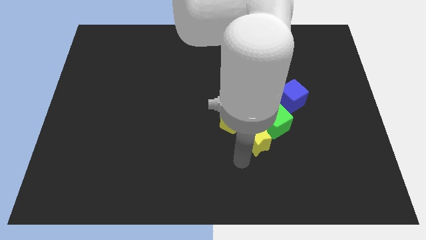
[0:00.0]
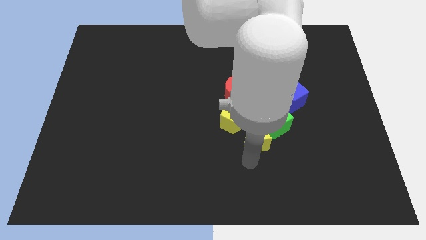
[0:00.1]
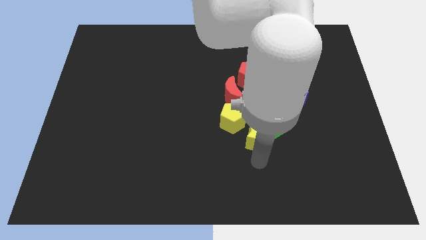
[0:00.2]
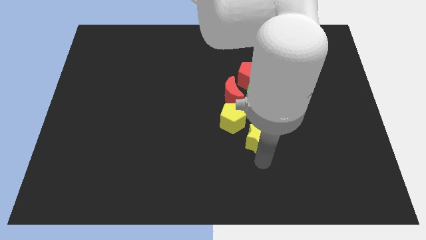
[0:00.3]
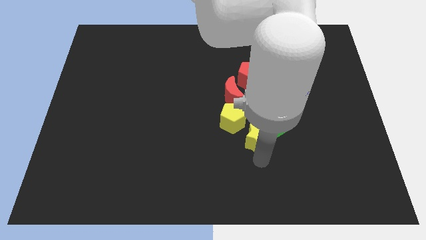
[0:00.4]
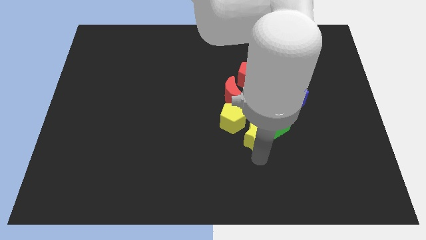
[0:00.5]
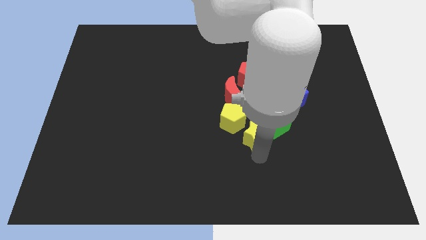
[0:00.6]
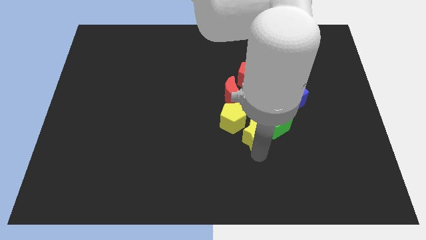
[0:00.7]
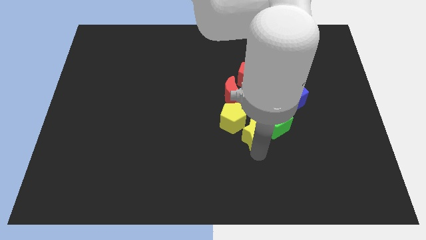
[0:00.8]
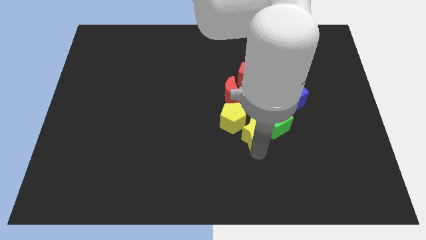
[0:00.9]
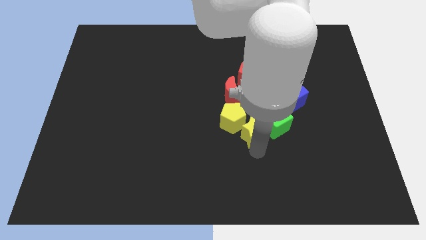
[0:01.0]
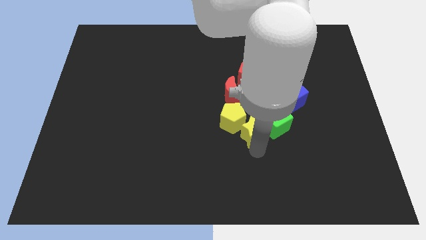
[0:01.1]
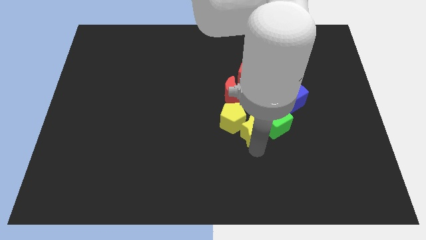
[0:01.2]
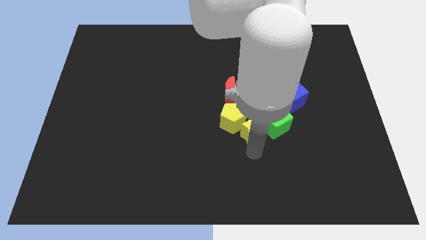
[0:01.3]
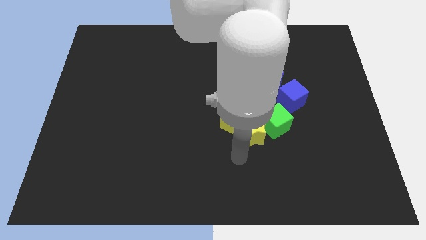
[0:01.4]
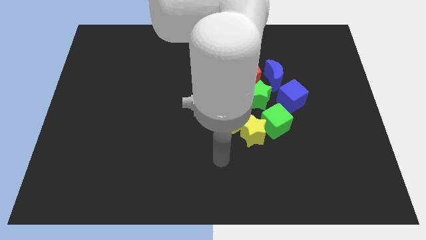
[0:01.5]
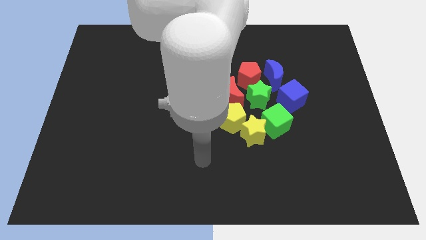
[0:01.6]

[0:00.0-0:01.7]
push the yellow star into the yellow pentagon

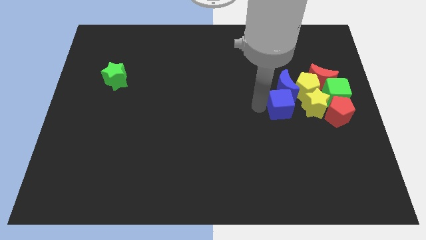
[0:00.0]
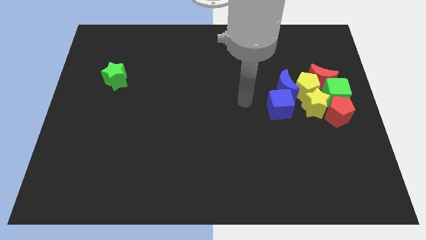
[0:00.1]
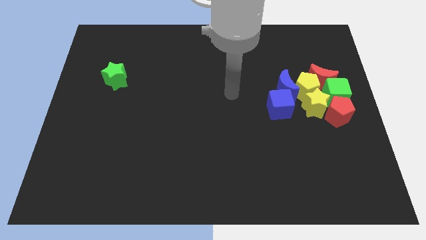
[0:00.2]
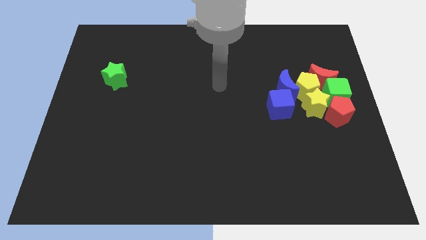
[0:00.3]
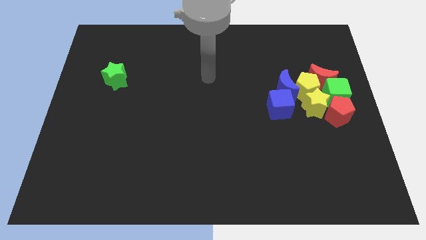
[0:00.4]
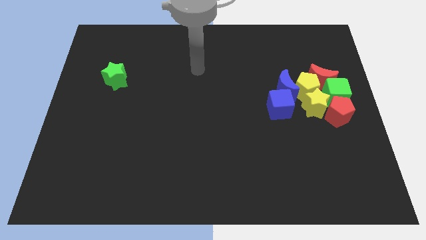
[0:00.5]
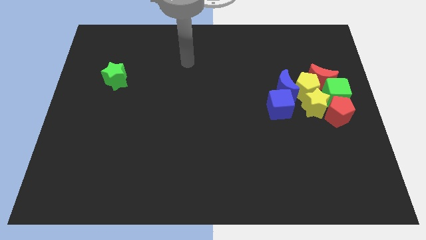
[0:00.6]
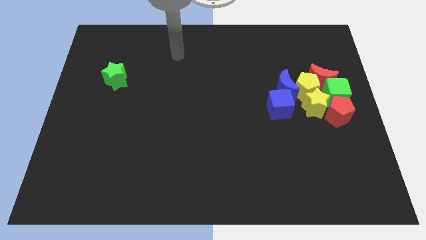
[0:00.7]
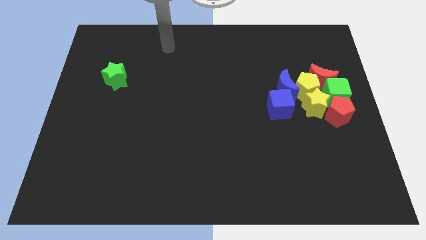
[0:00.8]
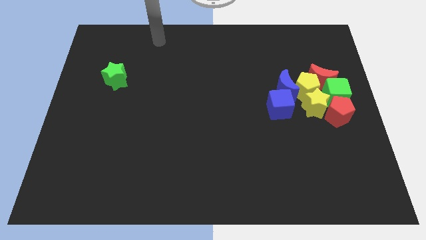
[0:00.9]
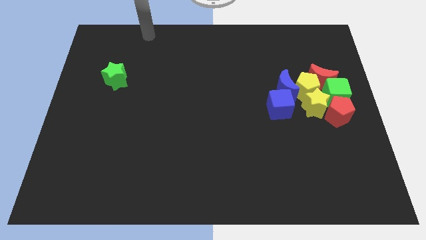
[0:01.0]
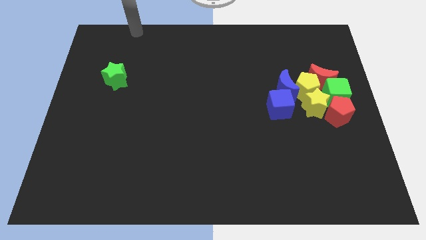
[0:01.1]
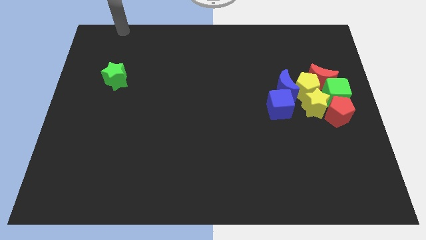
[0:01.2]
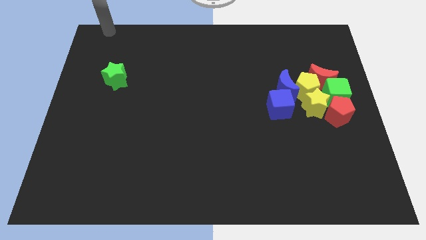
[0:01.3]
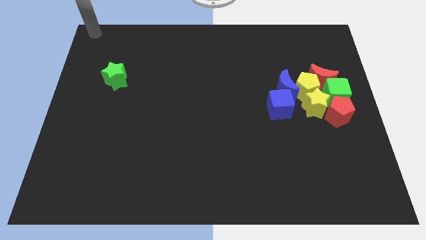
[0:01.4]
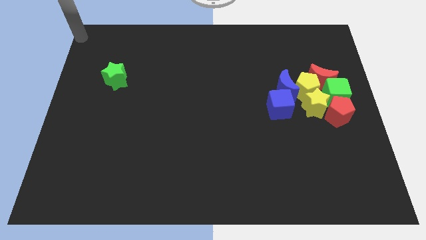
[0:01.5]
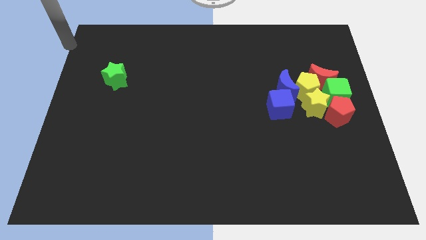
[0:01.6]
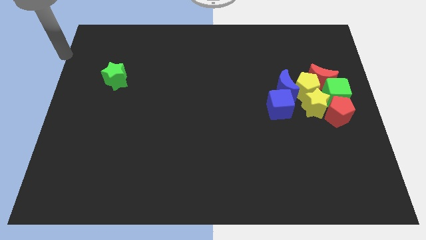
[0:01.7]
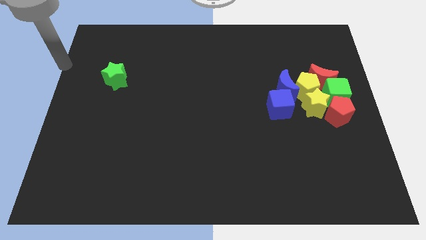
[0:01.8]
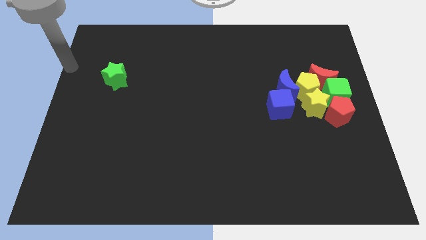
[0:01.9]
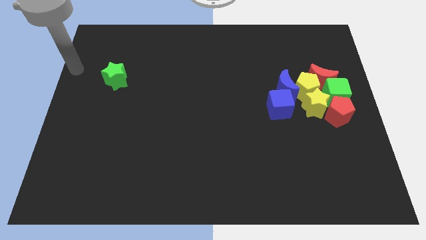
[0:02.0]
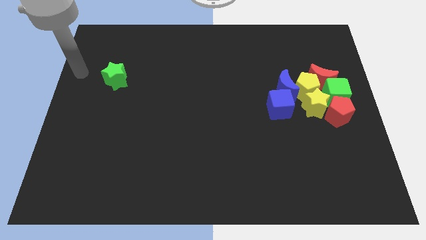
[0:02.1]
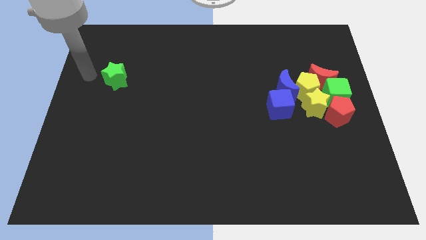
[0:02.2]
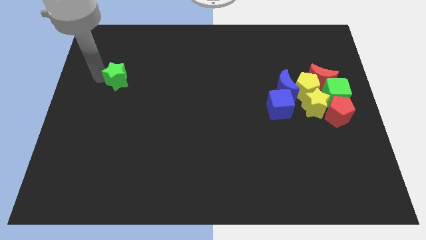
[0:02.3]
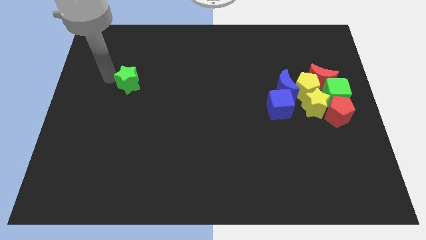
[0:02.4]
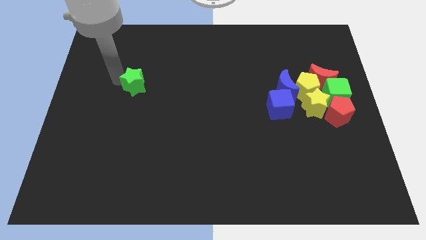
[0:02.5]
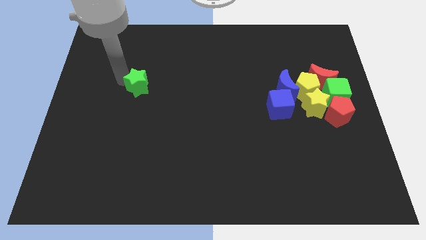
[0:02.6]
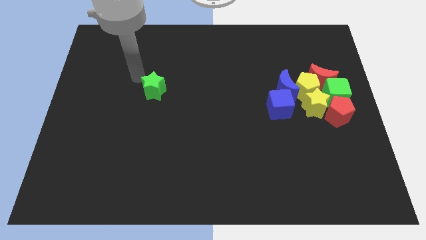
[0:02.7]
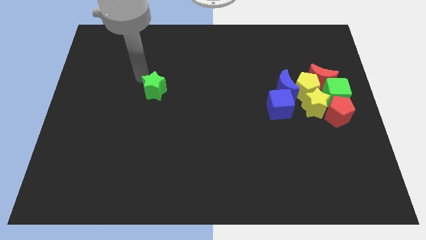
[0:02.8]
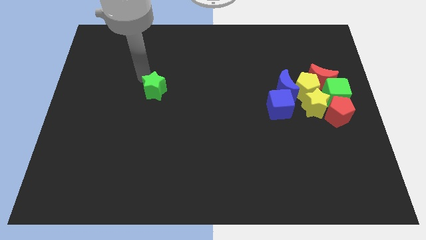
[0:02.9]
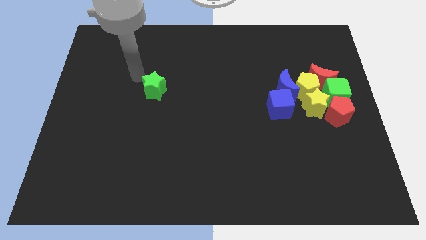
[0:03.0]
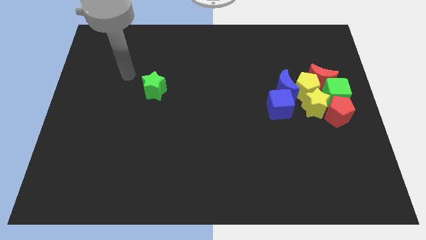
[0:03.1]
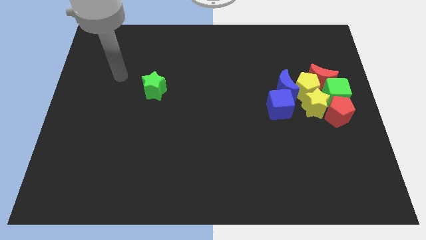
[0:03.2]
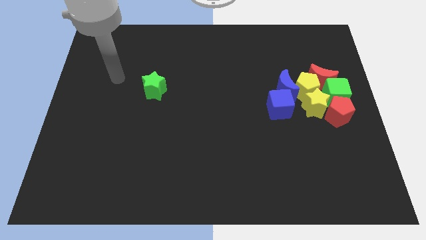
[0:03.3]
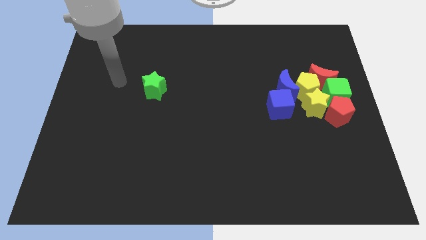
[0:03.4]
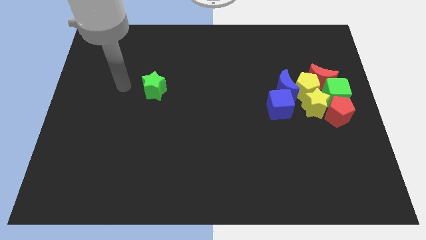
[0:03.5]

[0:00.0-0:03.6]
move the green star slightly right side

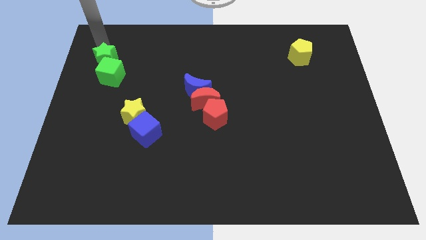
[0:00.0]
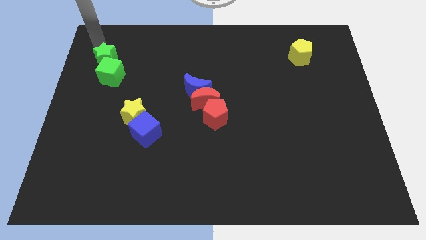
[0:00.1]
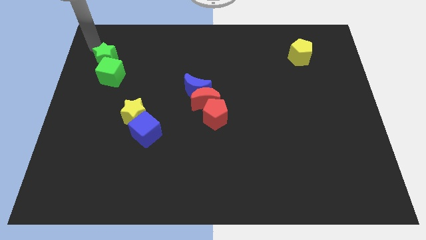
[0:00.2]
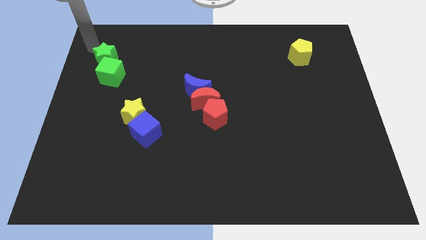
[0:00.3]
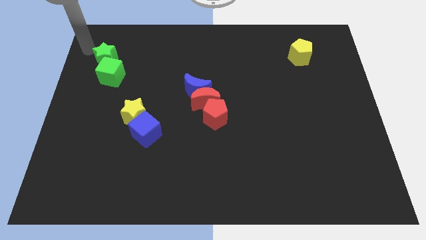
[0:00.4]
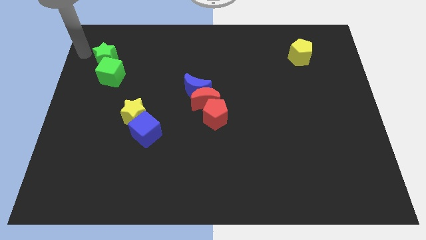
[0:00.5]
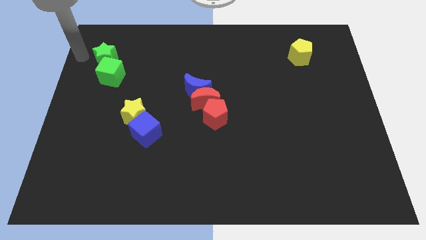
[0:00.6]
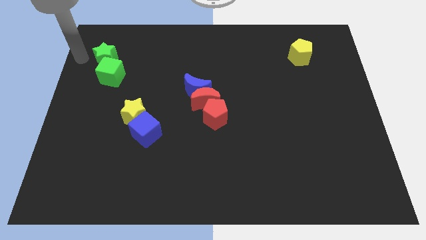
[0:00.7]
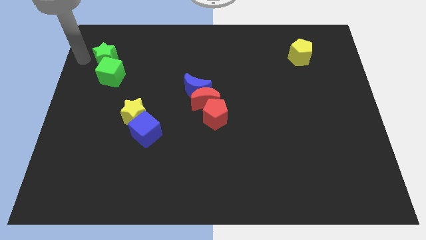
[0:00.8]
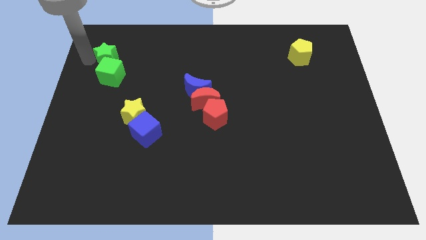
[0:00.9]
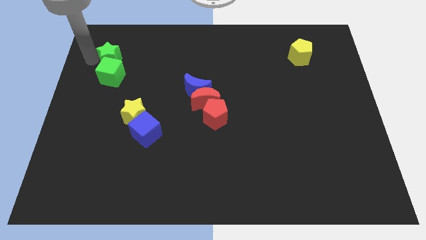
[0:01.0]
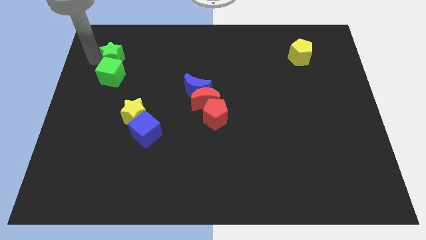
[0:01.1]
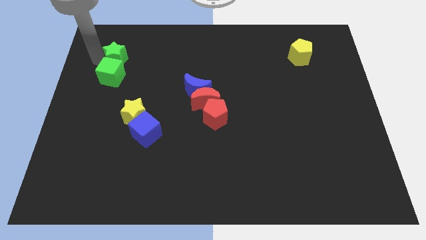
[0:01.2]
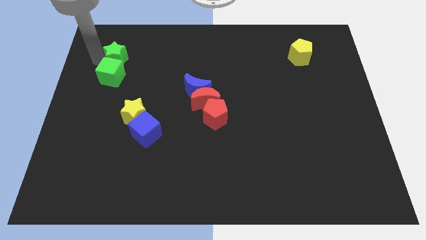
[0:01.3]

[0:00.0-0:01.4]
adjust the green star at the top of green cube

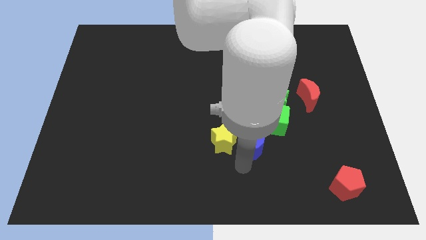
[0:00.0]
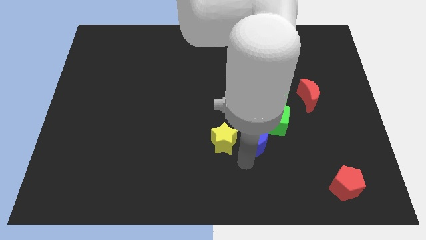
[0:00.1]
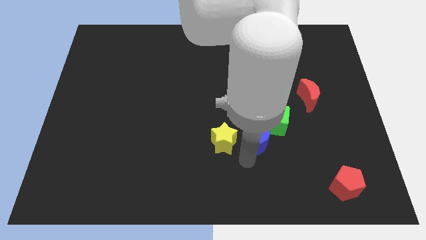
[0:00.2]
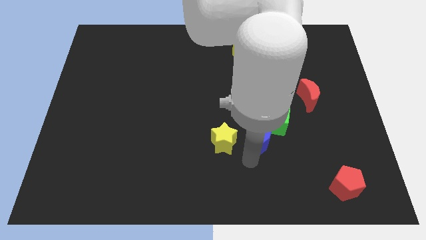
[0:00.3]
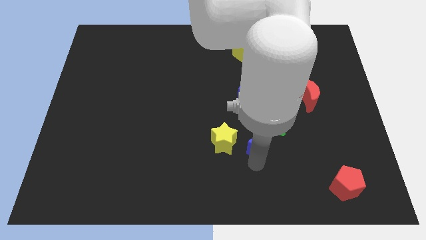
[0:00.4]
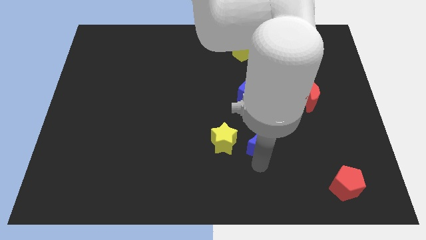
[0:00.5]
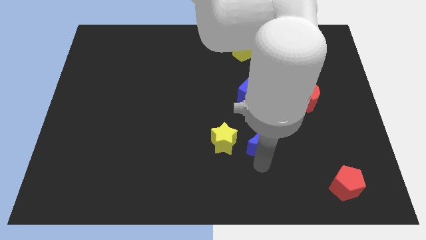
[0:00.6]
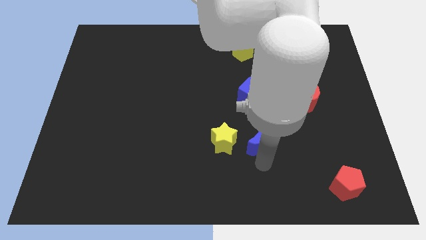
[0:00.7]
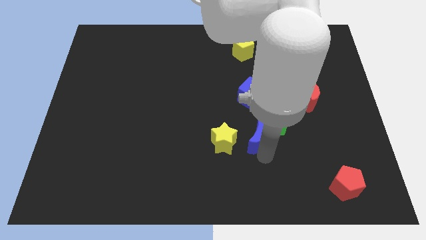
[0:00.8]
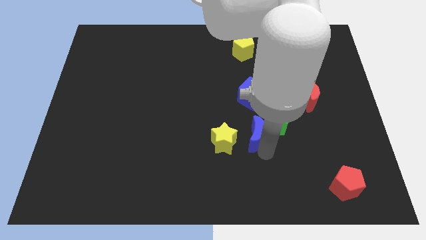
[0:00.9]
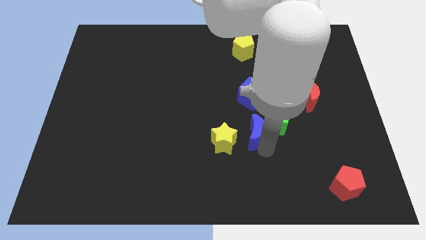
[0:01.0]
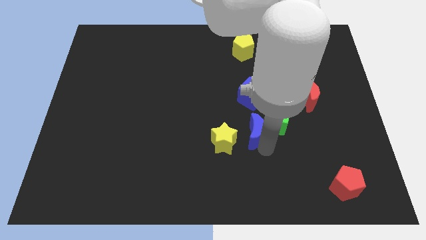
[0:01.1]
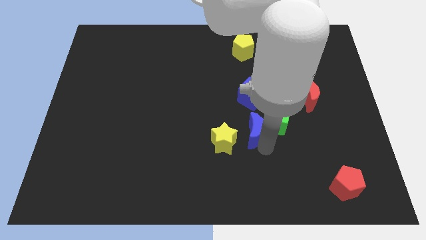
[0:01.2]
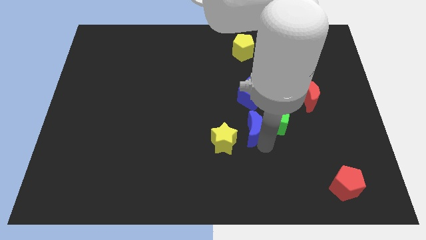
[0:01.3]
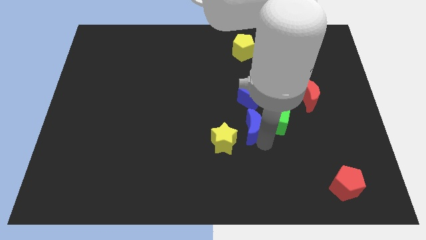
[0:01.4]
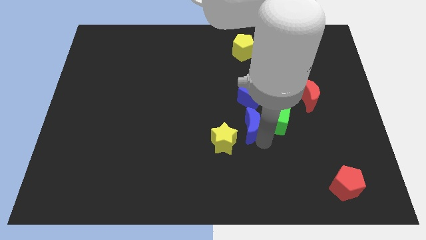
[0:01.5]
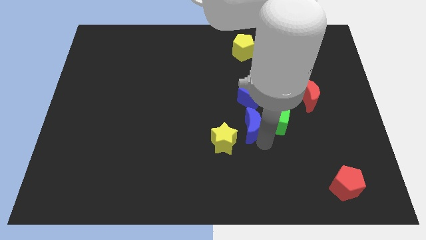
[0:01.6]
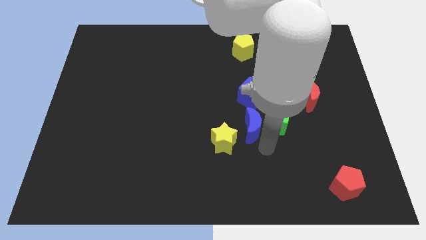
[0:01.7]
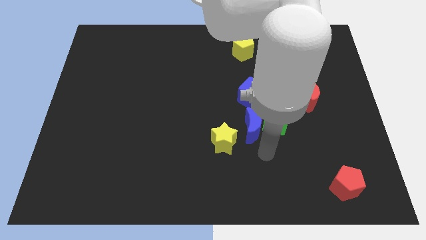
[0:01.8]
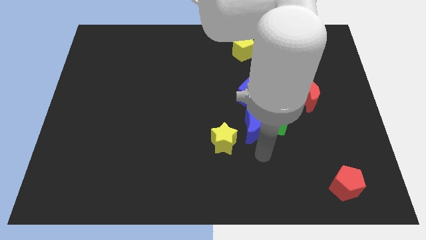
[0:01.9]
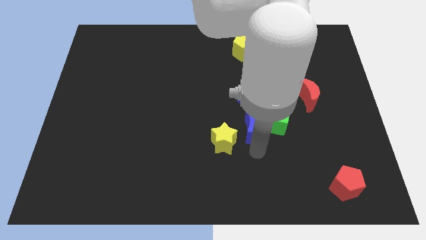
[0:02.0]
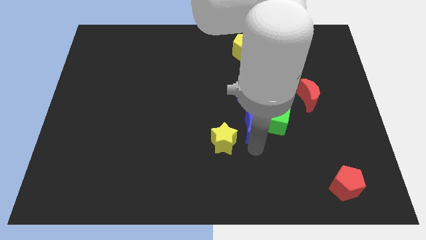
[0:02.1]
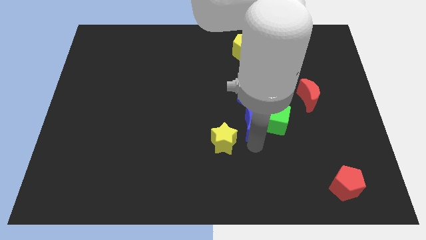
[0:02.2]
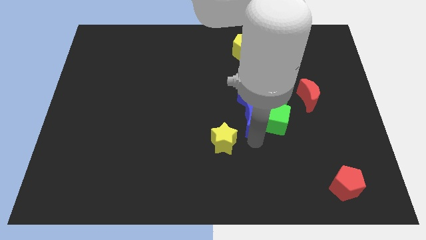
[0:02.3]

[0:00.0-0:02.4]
move the blue crescent to the left of the green cube
